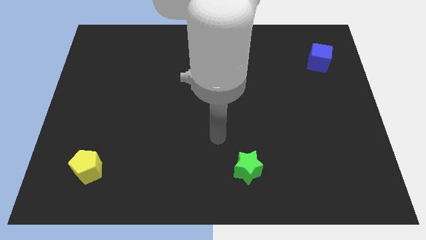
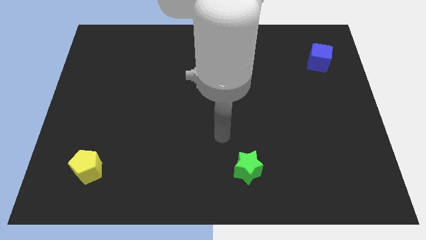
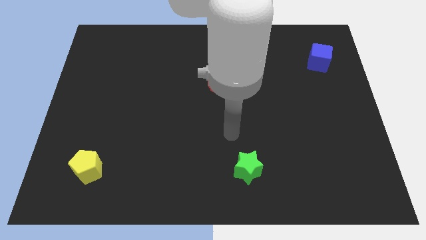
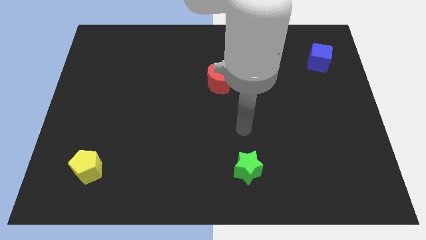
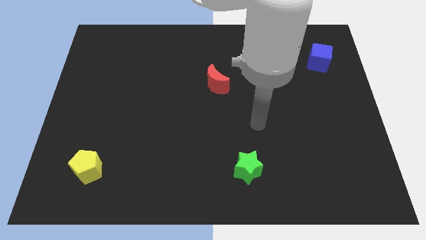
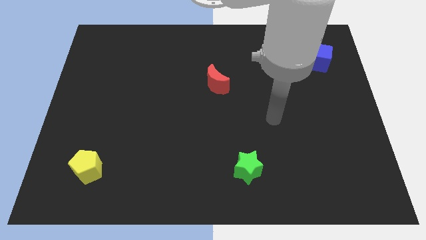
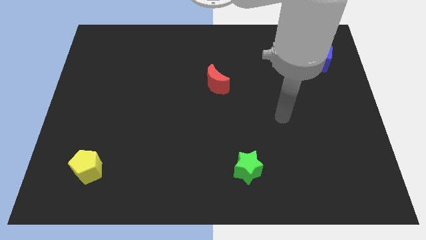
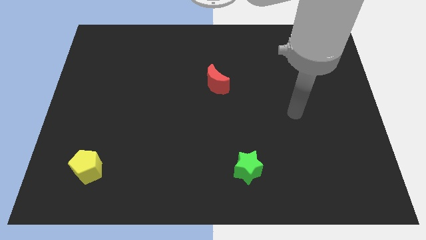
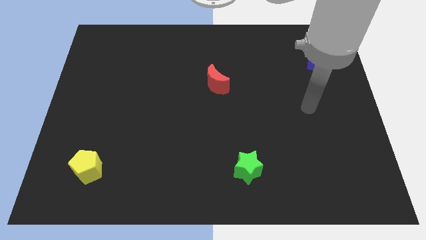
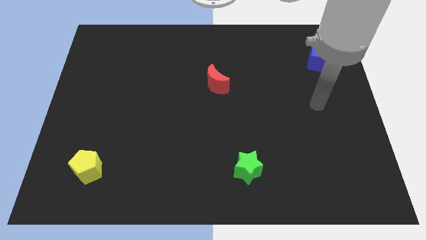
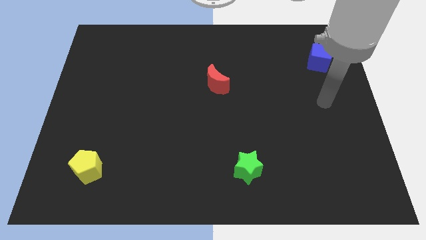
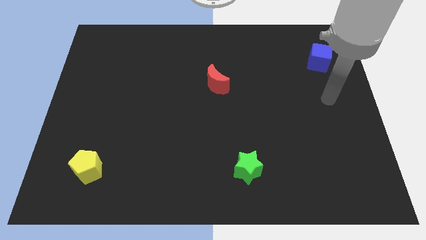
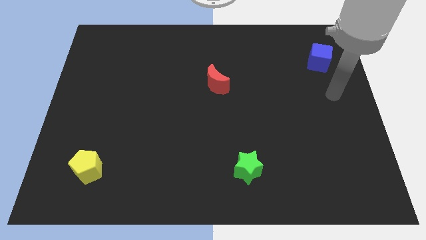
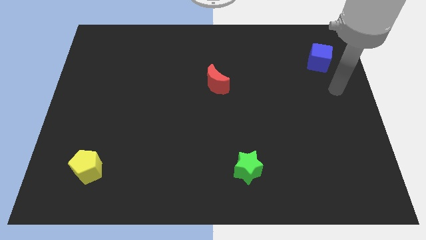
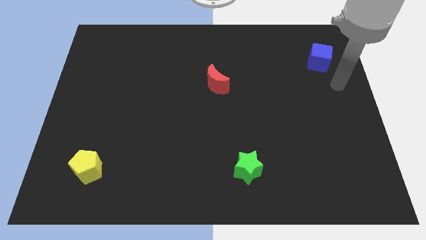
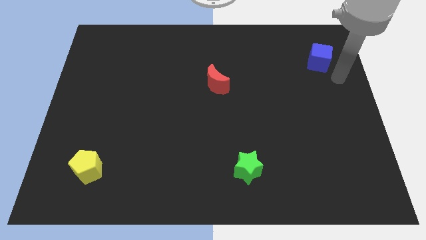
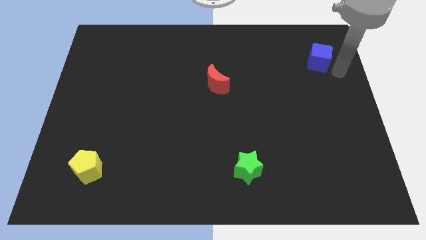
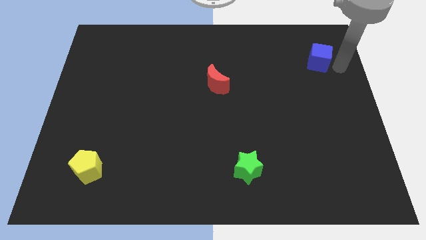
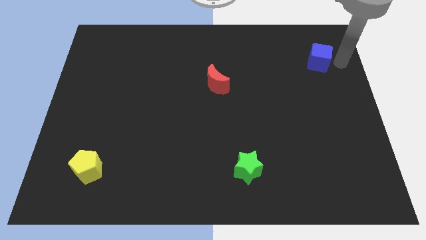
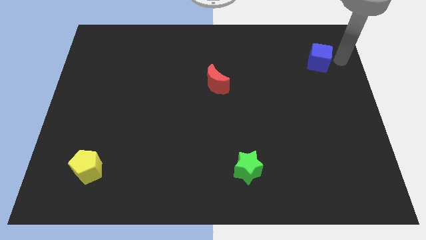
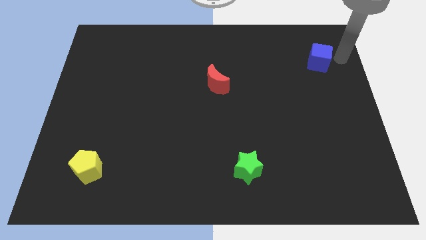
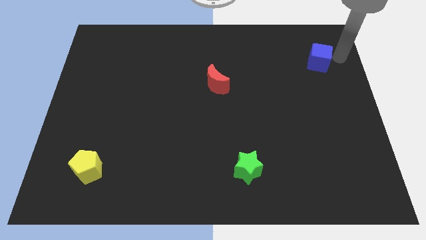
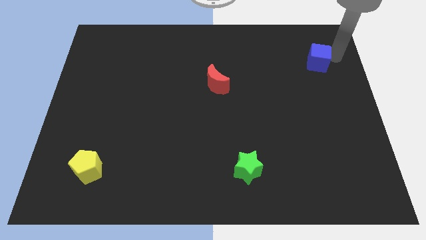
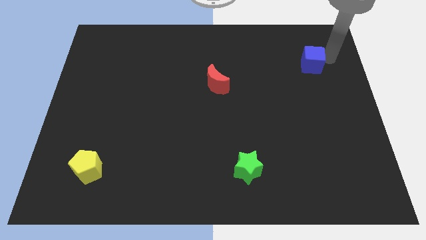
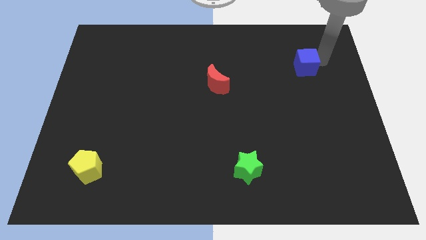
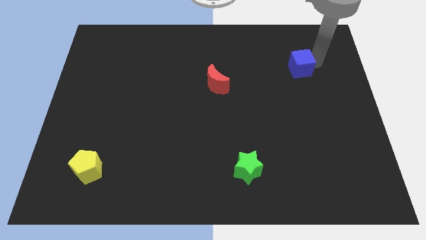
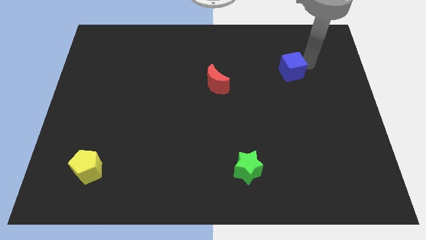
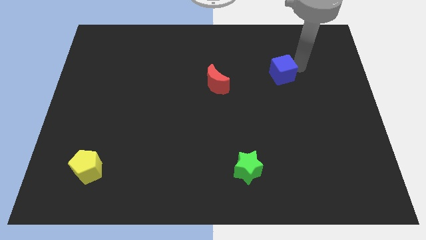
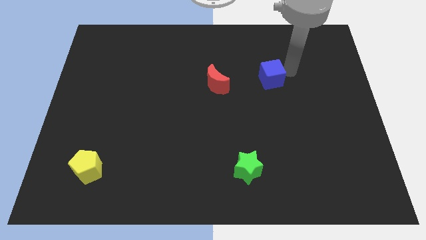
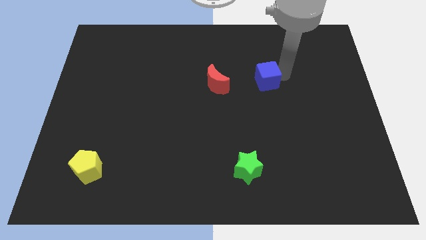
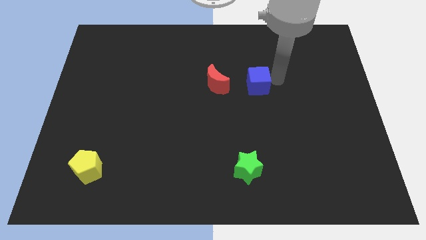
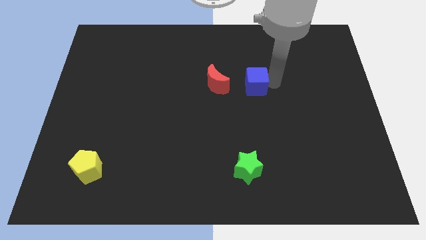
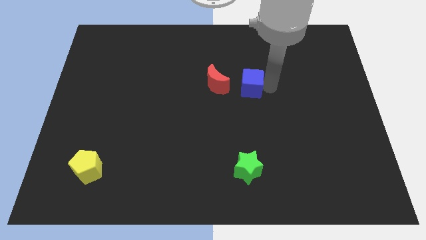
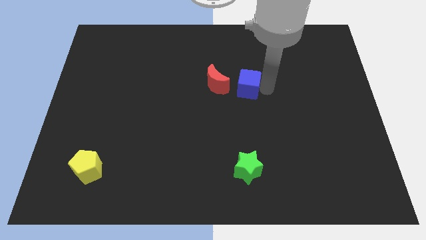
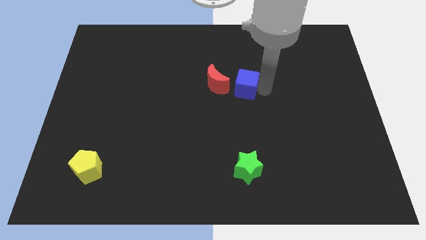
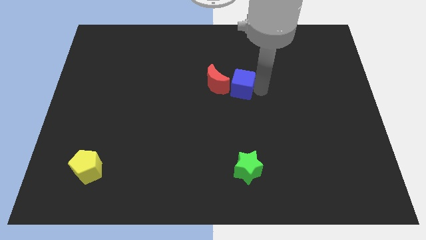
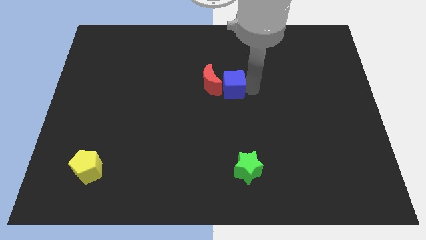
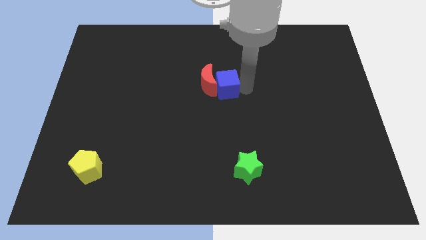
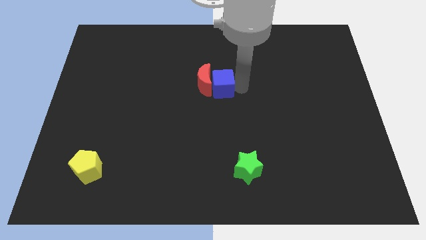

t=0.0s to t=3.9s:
put the blue cube next to the red moon

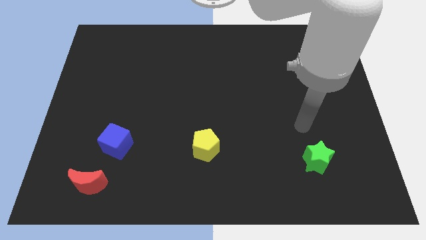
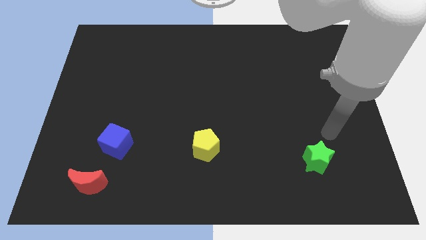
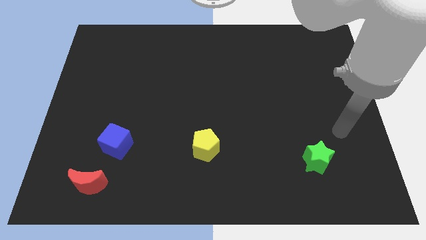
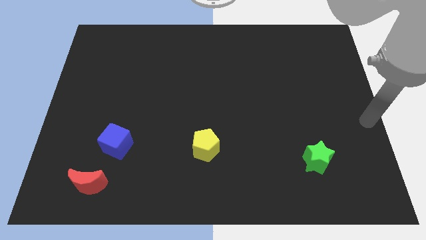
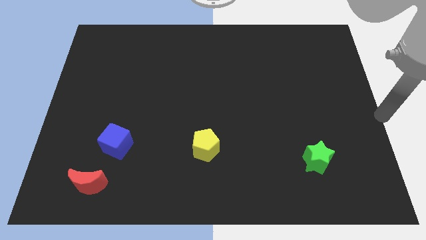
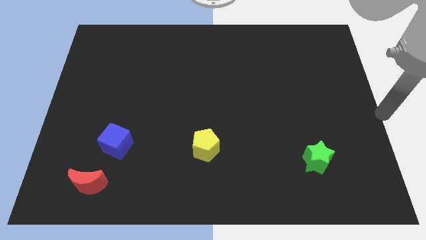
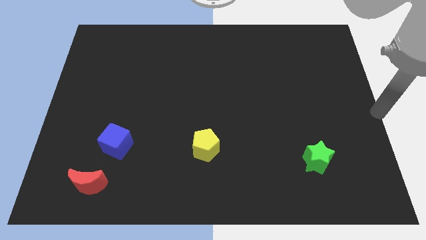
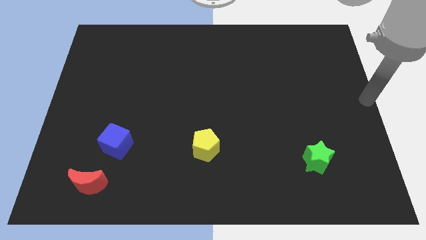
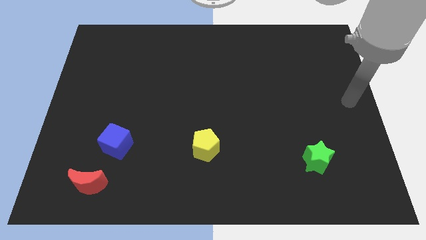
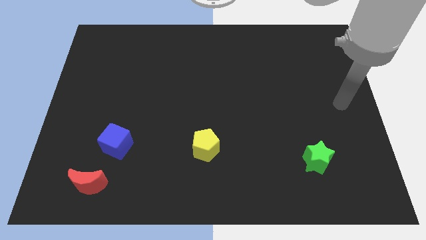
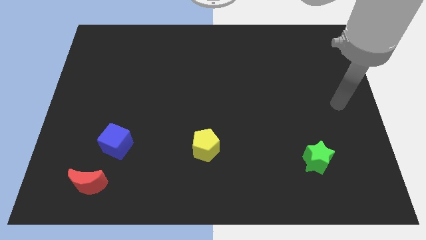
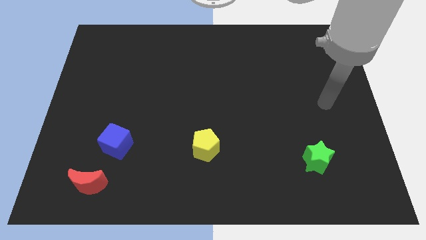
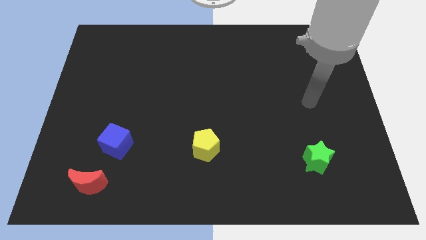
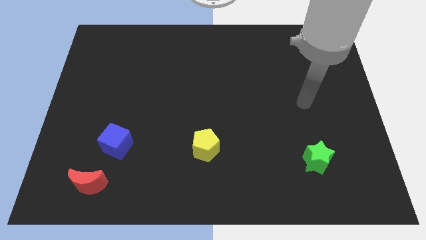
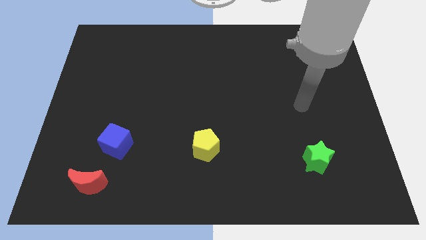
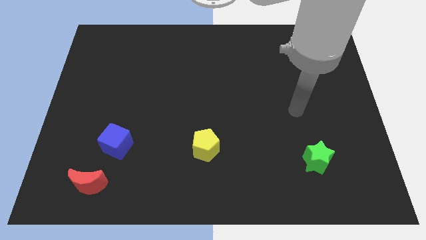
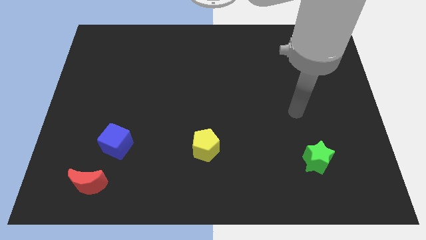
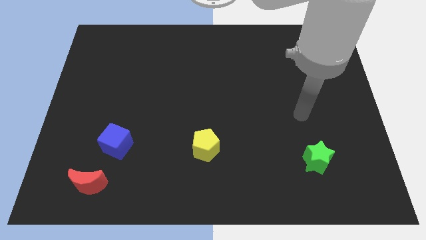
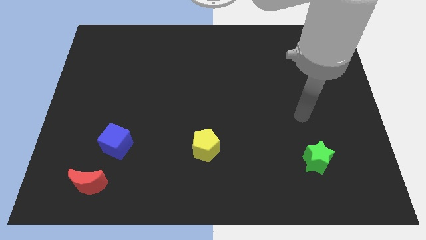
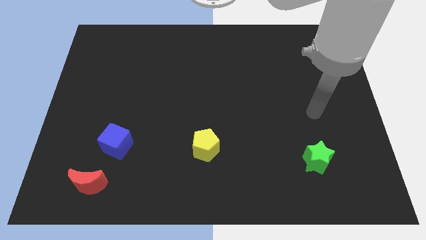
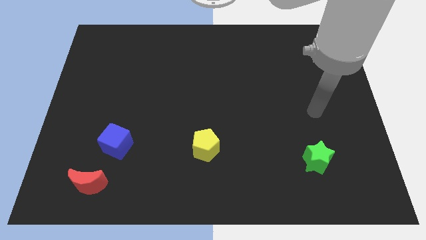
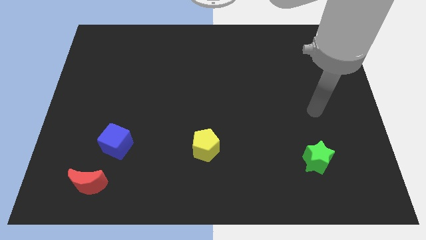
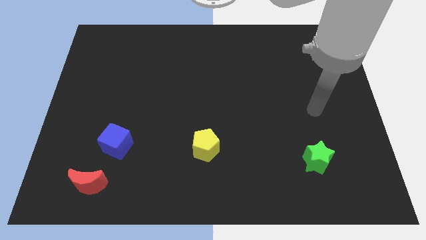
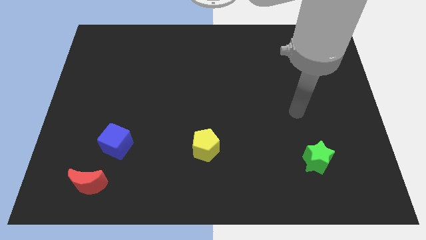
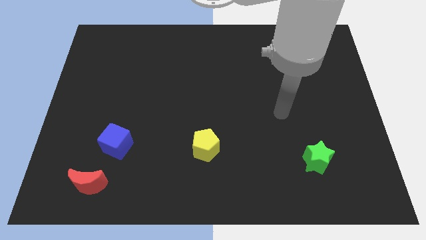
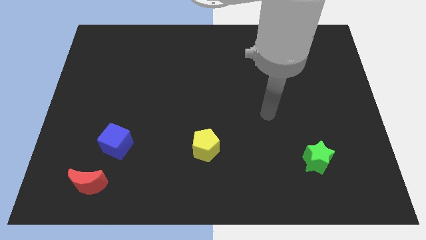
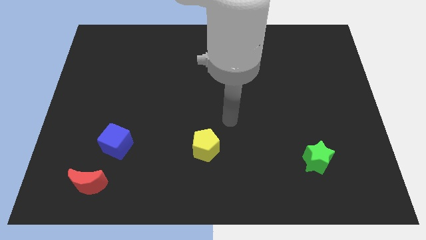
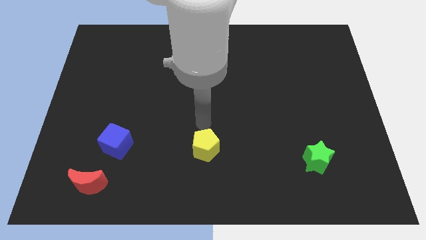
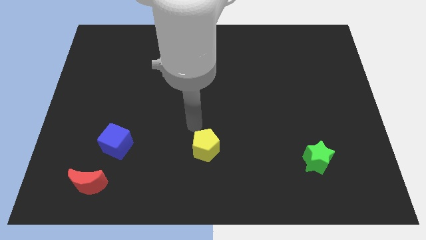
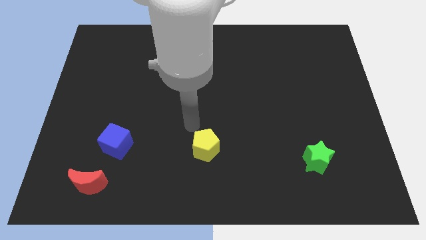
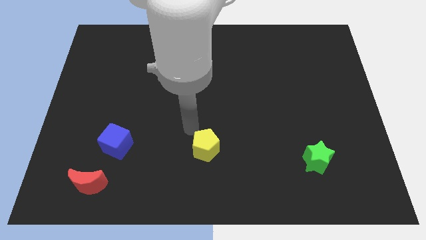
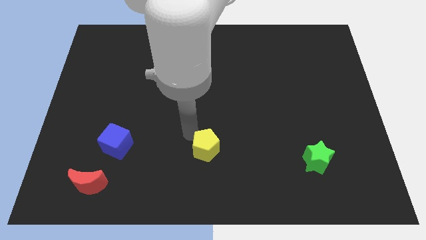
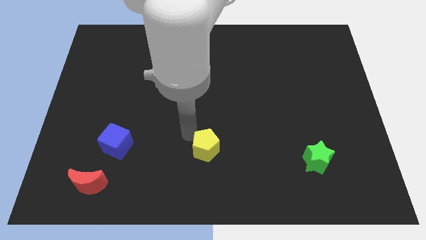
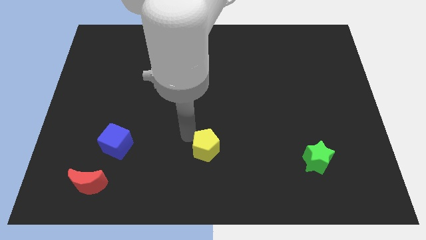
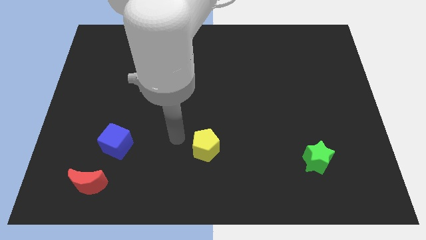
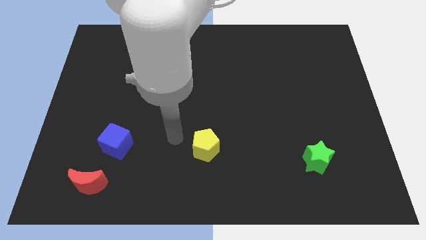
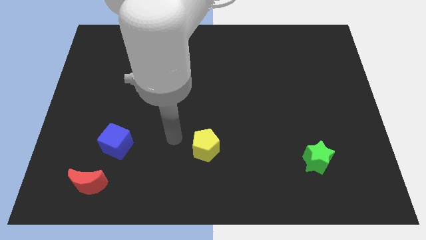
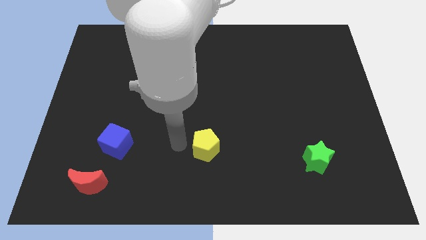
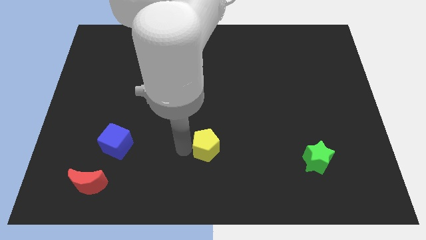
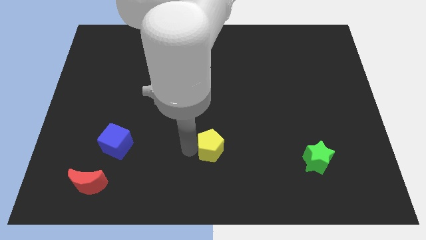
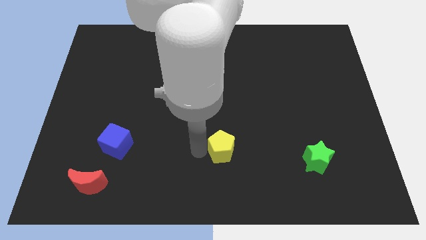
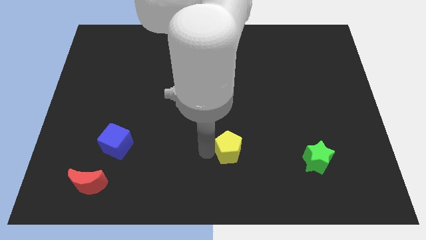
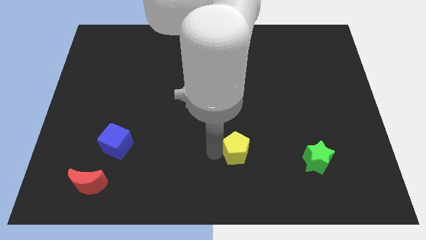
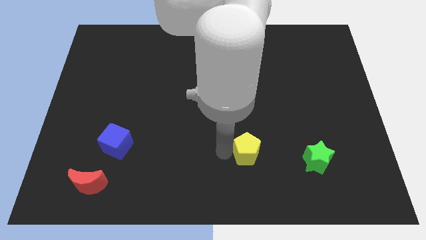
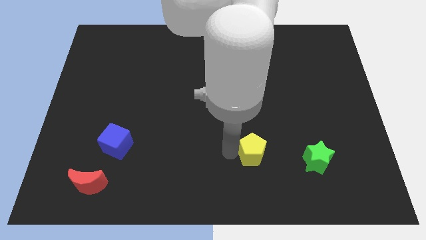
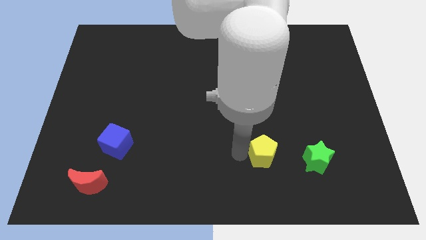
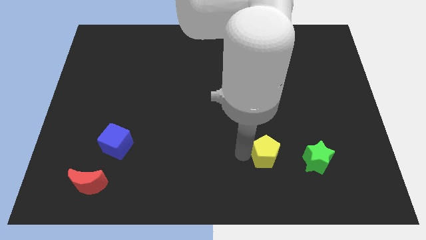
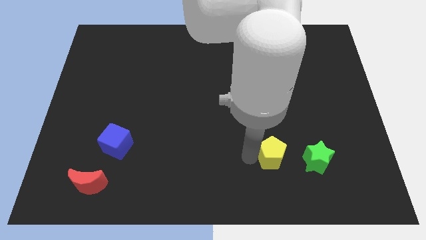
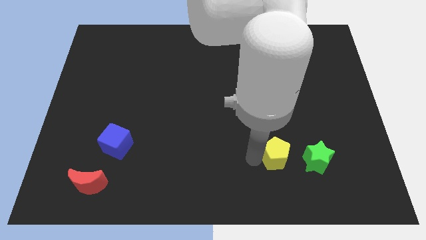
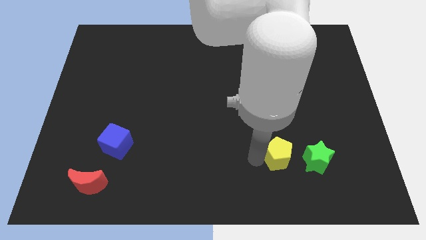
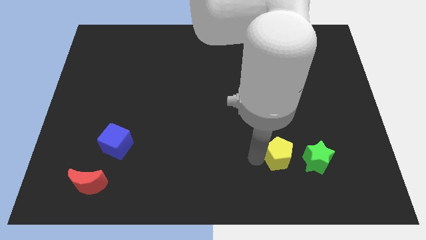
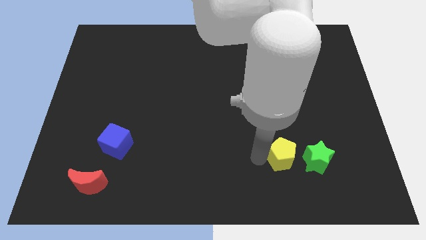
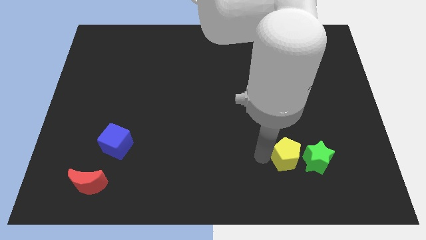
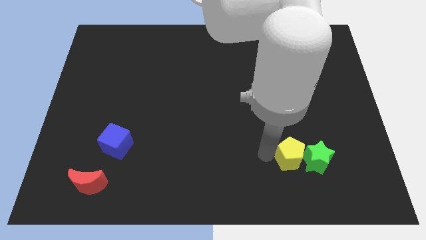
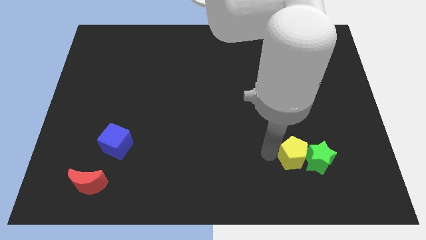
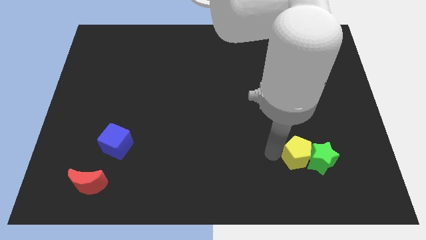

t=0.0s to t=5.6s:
slide the yellow pentagon towards the green star
